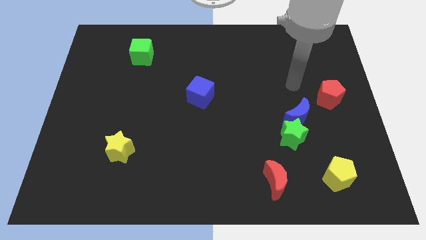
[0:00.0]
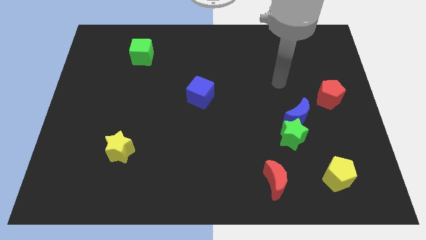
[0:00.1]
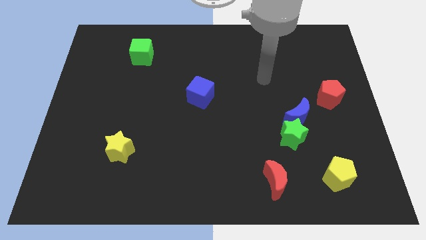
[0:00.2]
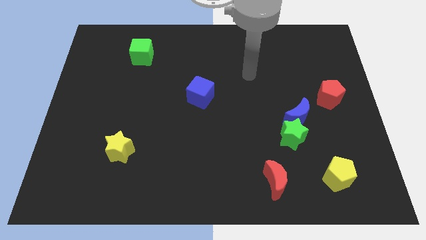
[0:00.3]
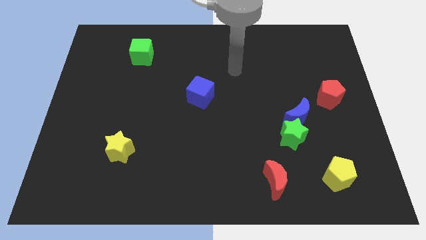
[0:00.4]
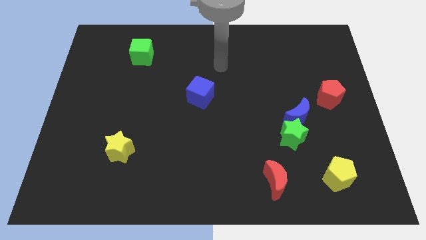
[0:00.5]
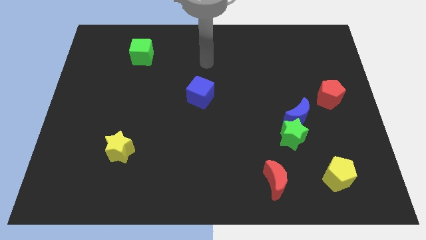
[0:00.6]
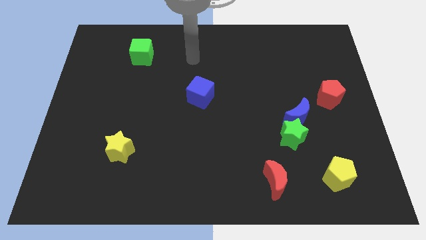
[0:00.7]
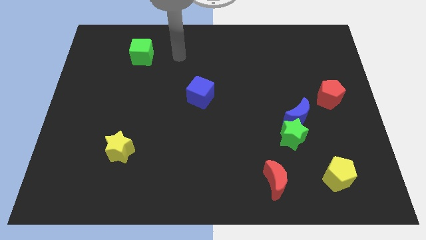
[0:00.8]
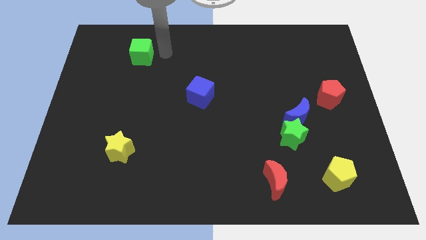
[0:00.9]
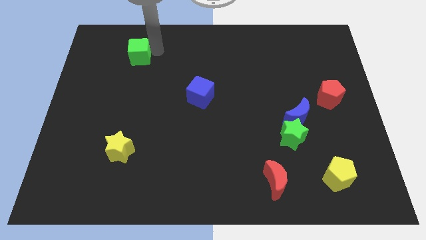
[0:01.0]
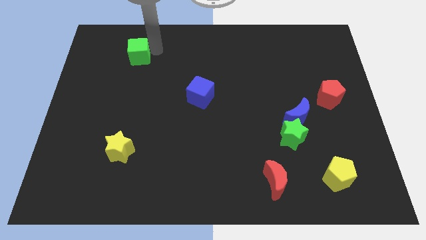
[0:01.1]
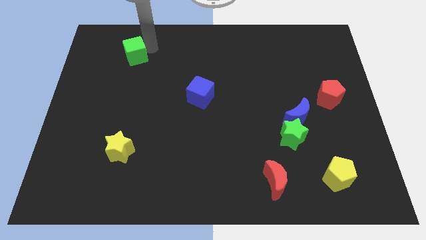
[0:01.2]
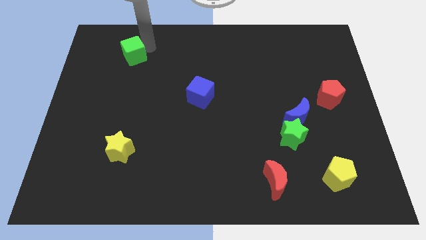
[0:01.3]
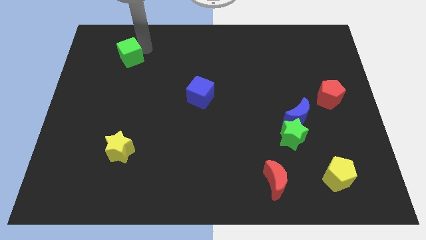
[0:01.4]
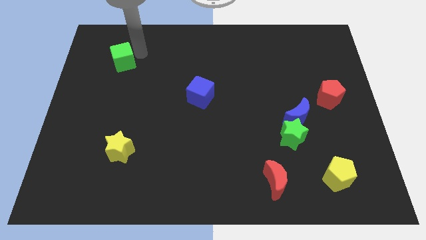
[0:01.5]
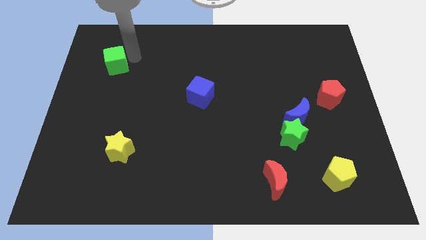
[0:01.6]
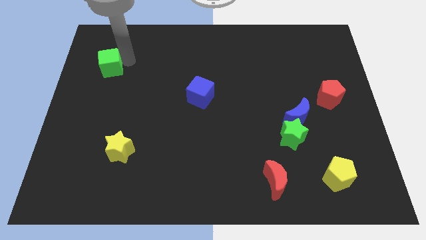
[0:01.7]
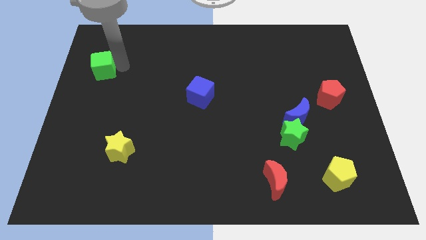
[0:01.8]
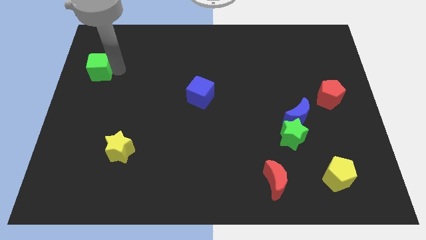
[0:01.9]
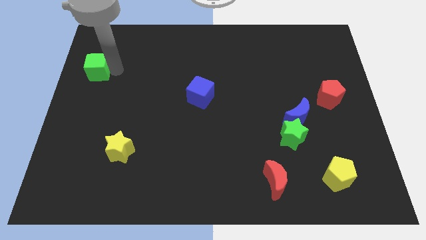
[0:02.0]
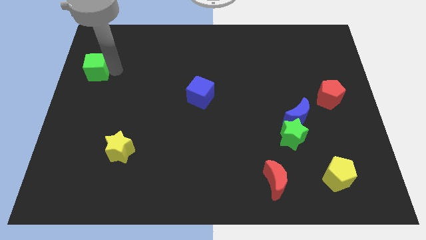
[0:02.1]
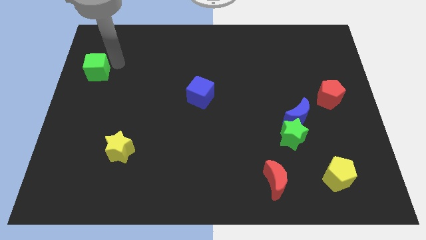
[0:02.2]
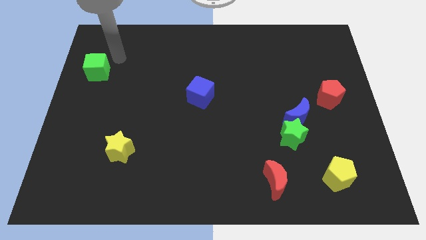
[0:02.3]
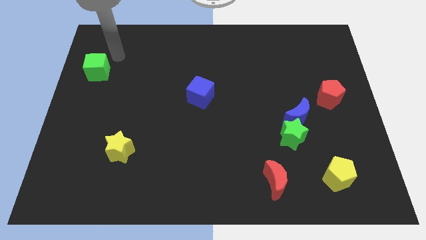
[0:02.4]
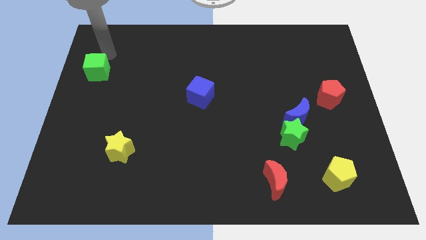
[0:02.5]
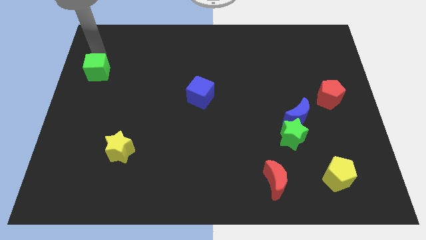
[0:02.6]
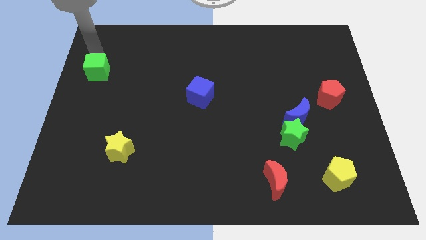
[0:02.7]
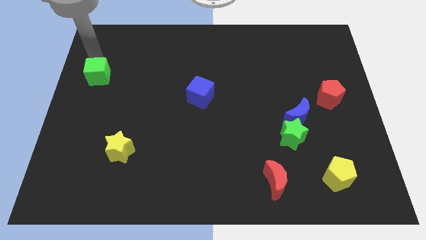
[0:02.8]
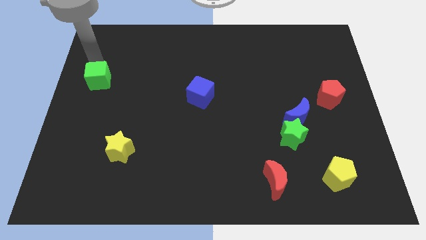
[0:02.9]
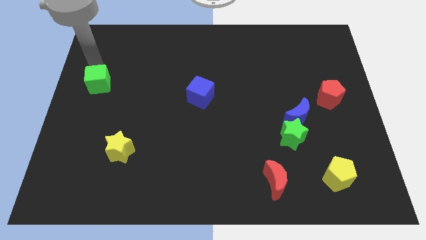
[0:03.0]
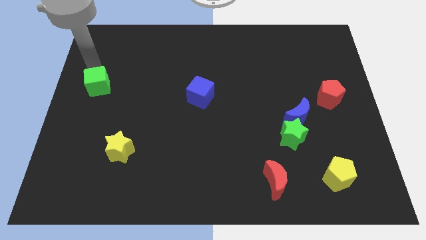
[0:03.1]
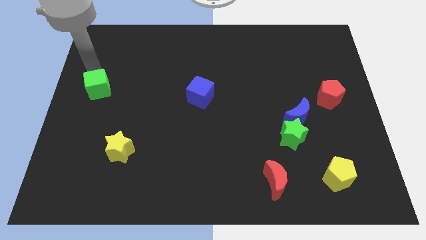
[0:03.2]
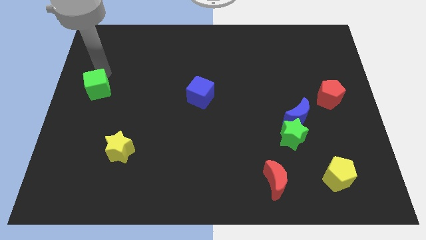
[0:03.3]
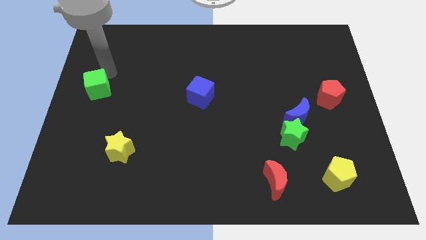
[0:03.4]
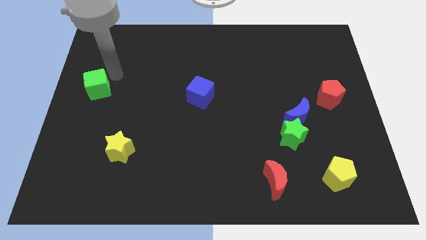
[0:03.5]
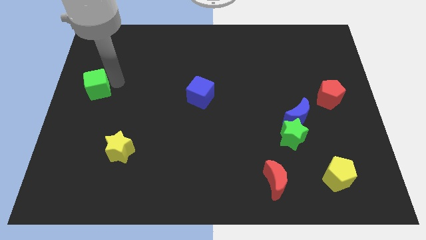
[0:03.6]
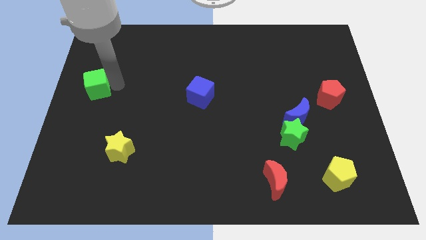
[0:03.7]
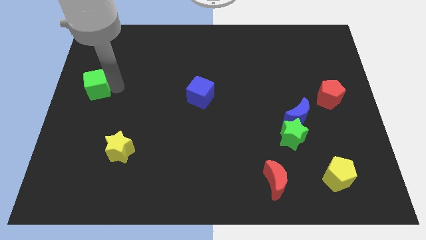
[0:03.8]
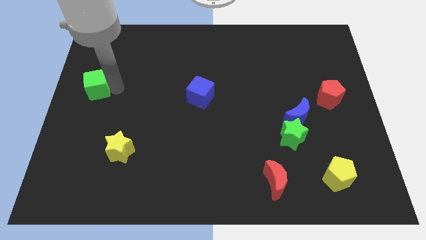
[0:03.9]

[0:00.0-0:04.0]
slide th green cube diagonally top left to the yellow star

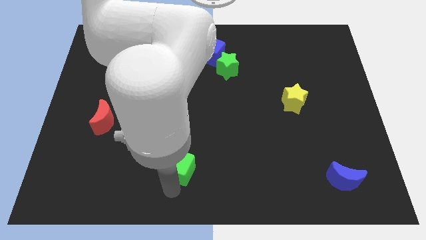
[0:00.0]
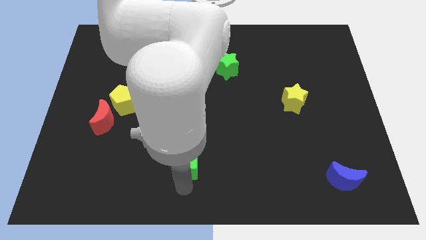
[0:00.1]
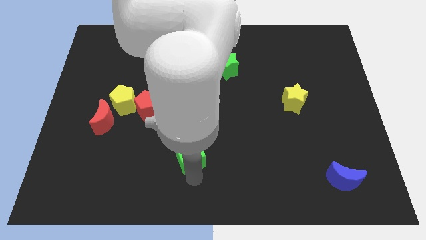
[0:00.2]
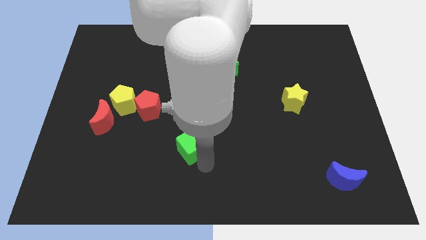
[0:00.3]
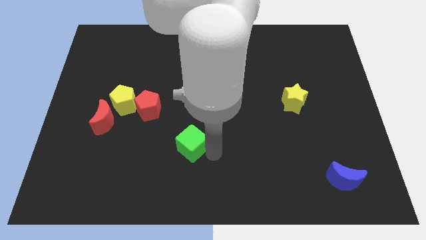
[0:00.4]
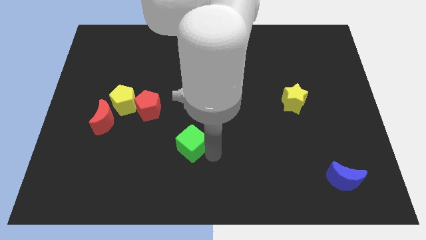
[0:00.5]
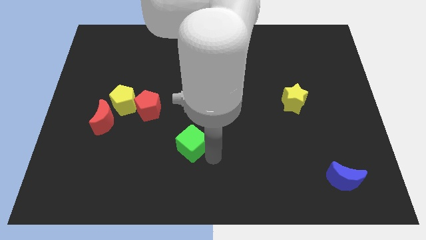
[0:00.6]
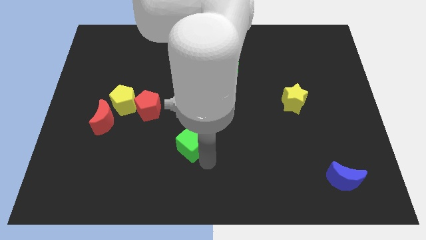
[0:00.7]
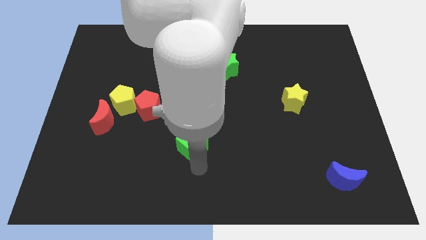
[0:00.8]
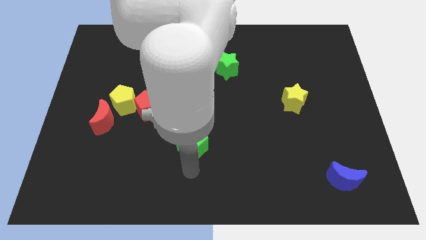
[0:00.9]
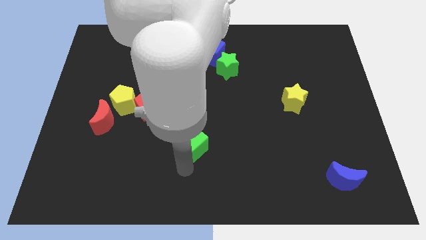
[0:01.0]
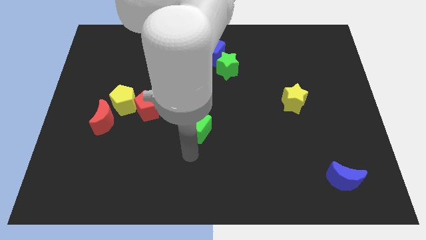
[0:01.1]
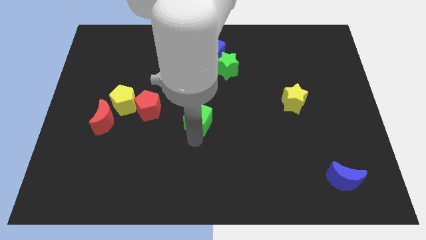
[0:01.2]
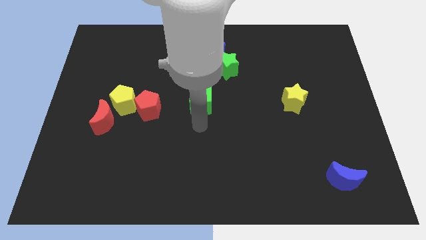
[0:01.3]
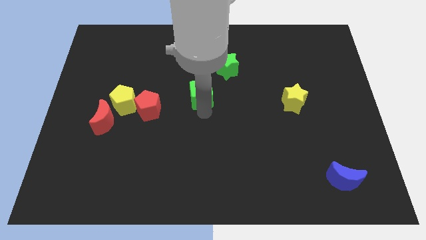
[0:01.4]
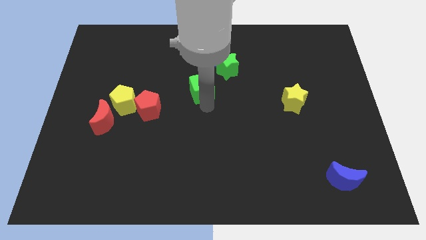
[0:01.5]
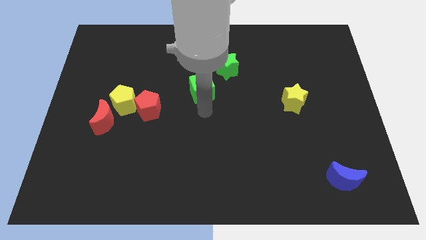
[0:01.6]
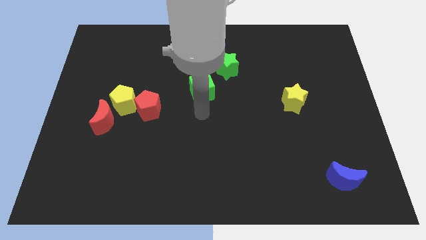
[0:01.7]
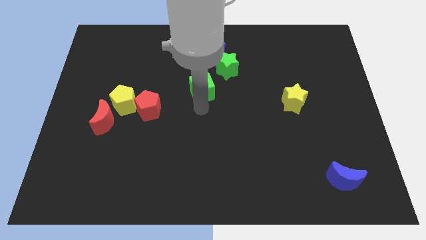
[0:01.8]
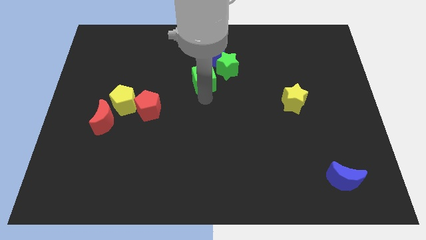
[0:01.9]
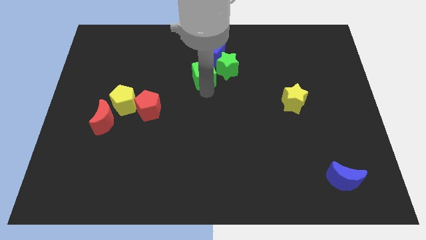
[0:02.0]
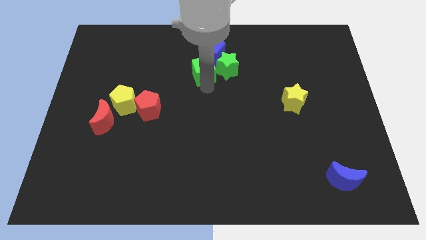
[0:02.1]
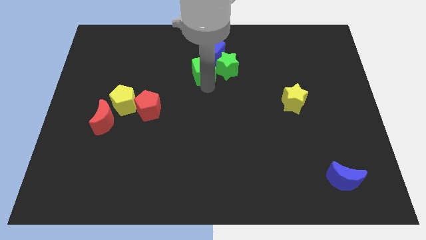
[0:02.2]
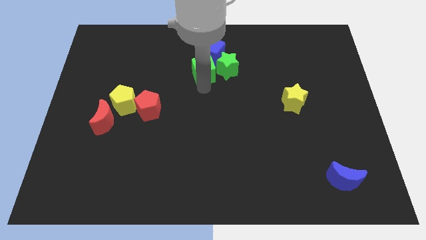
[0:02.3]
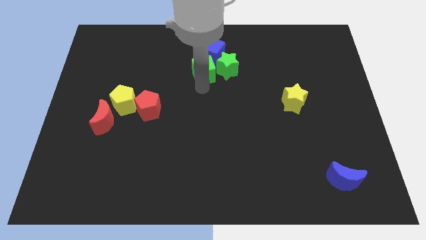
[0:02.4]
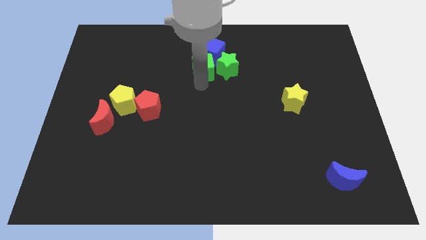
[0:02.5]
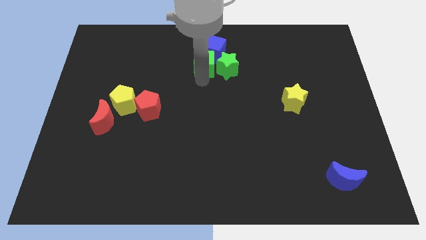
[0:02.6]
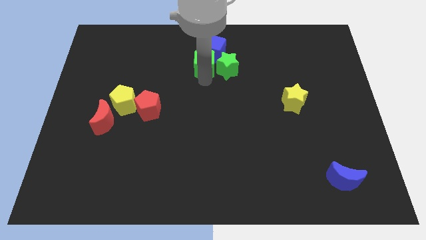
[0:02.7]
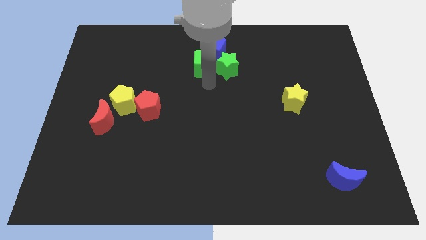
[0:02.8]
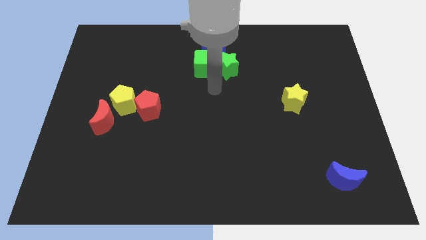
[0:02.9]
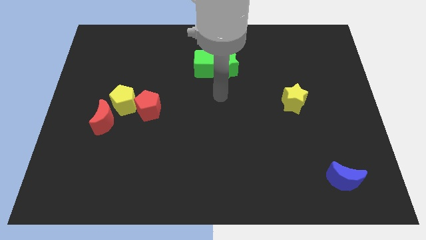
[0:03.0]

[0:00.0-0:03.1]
push the green cube to the left of the green star

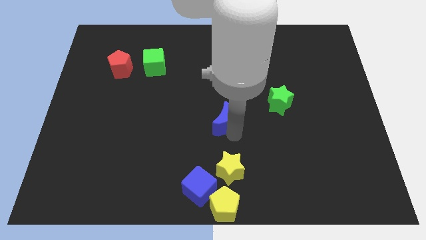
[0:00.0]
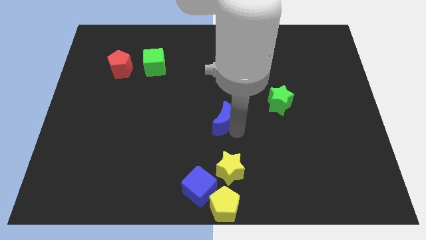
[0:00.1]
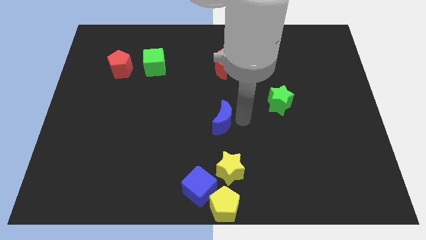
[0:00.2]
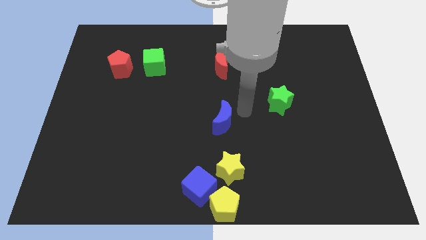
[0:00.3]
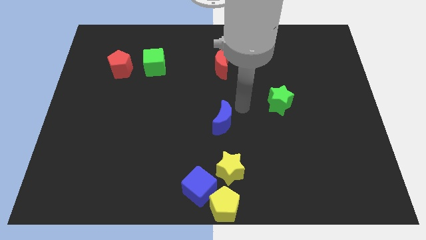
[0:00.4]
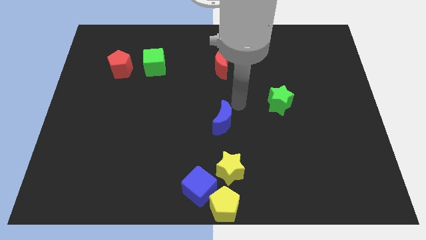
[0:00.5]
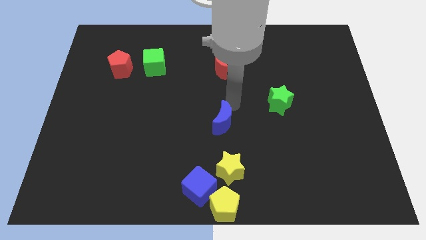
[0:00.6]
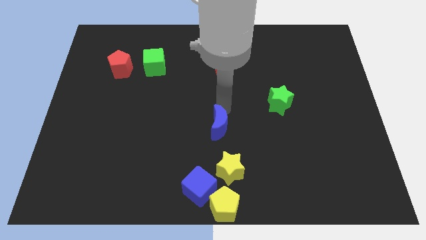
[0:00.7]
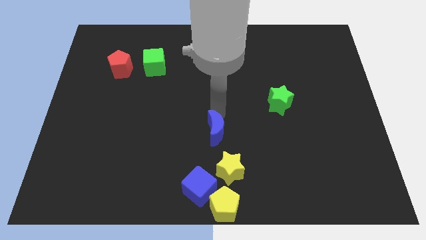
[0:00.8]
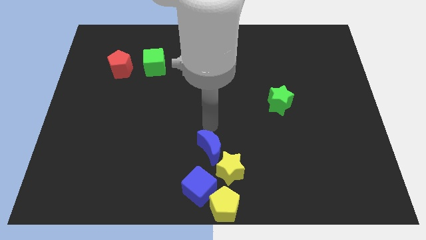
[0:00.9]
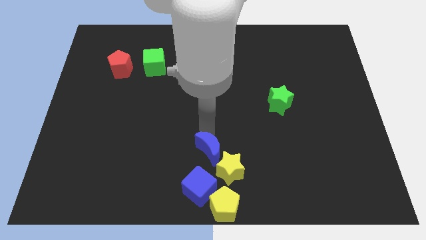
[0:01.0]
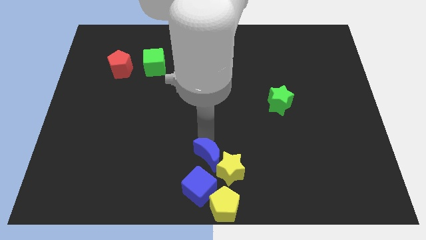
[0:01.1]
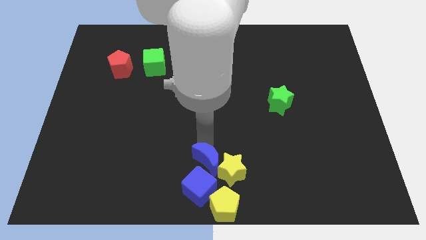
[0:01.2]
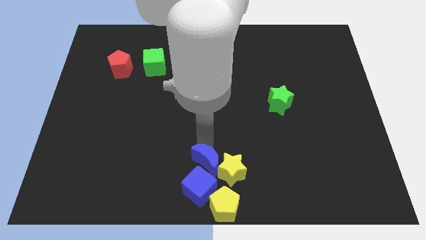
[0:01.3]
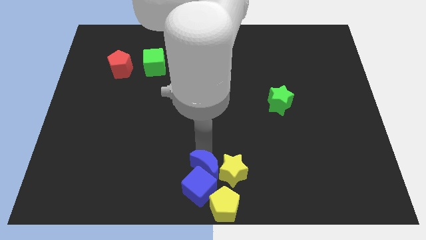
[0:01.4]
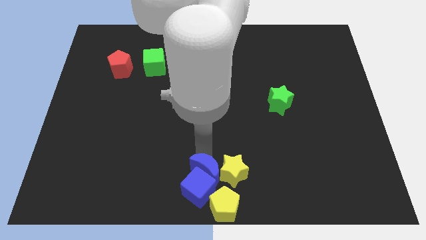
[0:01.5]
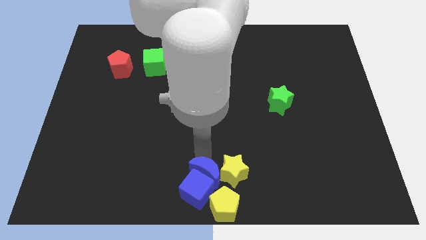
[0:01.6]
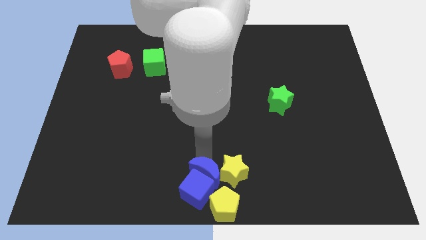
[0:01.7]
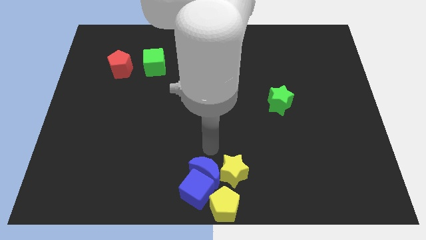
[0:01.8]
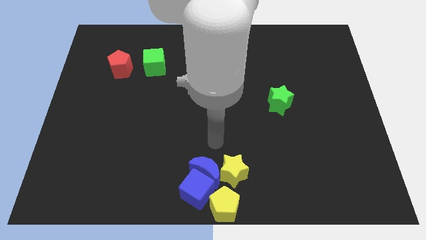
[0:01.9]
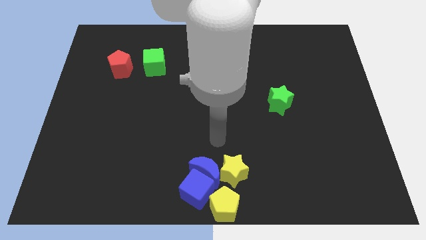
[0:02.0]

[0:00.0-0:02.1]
place blue moon on top of blue cube
